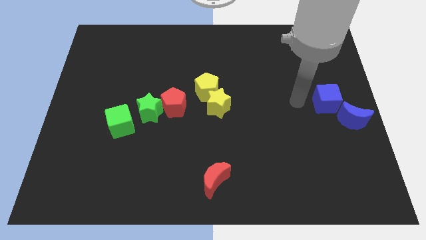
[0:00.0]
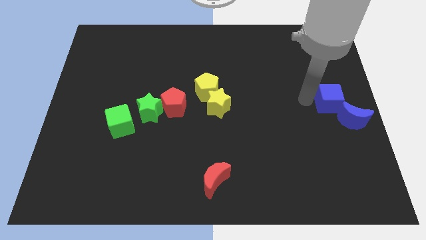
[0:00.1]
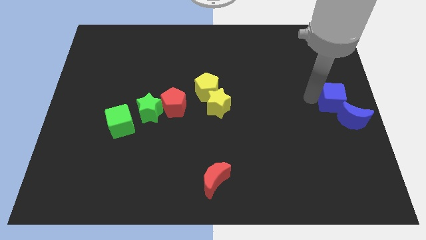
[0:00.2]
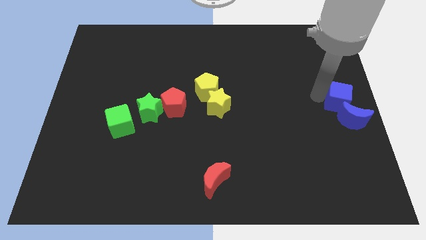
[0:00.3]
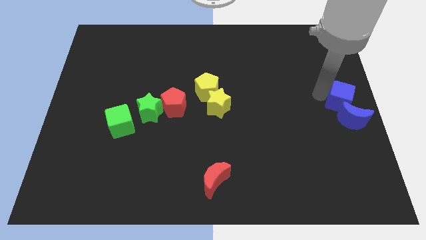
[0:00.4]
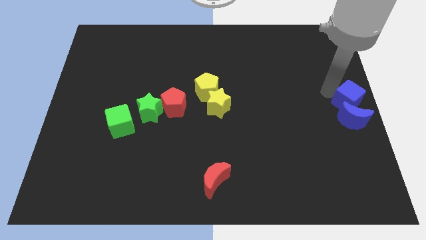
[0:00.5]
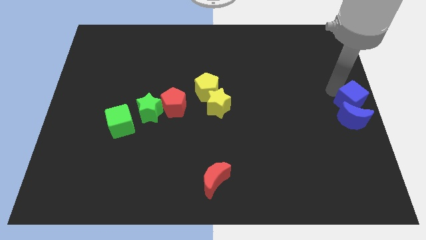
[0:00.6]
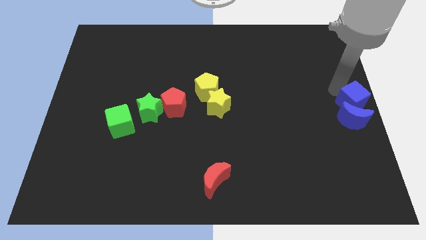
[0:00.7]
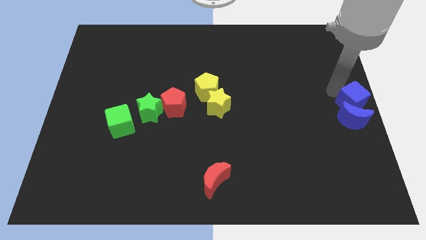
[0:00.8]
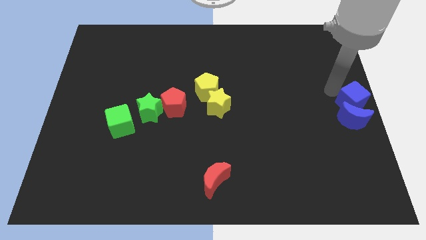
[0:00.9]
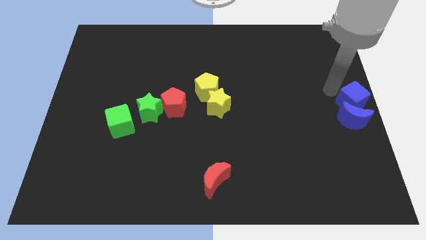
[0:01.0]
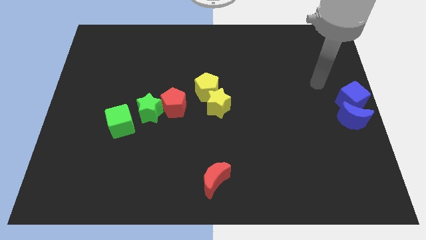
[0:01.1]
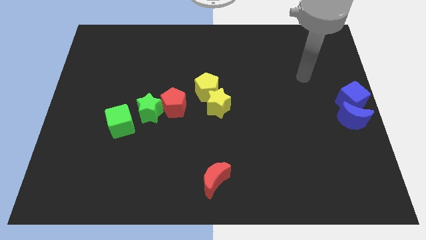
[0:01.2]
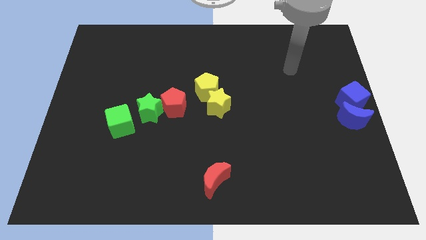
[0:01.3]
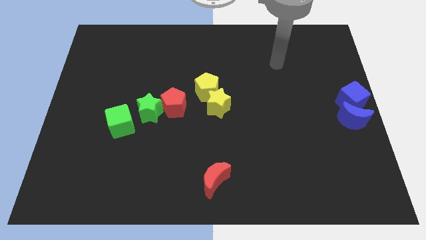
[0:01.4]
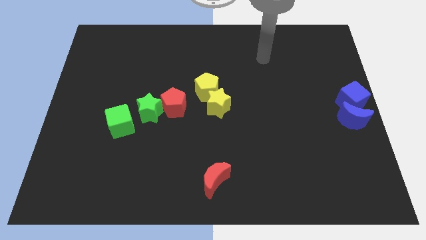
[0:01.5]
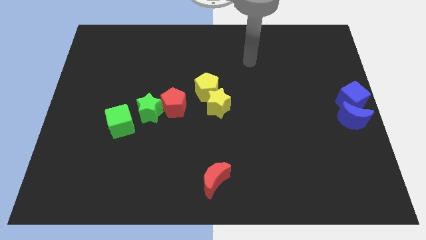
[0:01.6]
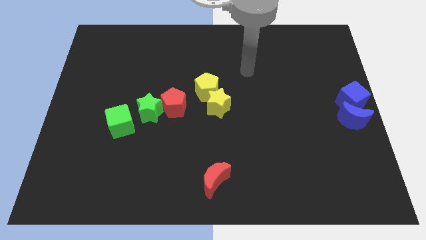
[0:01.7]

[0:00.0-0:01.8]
place the blue cube to the top of the blue moon

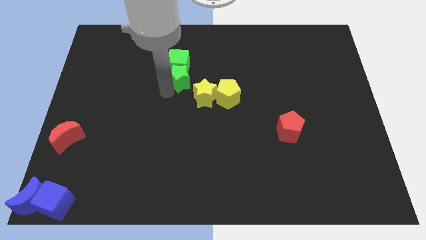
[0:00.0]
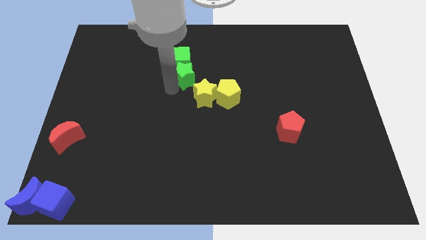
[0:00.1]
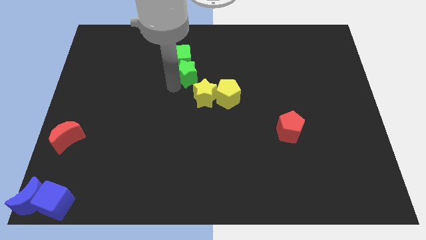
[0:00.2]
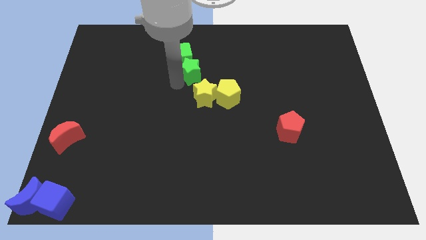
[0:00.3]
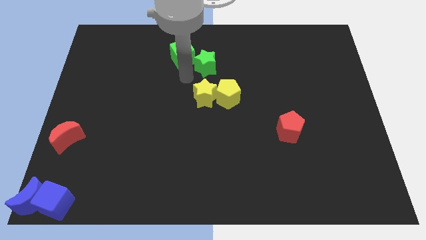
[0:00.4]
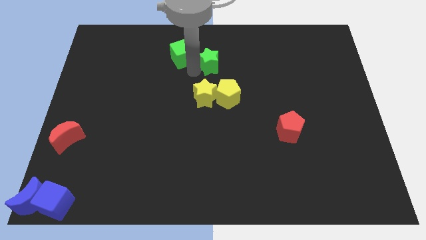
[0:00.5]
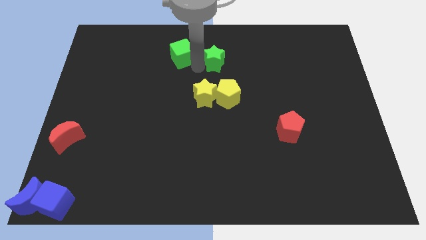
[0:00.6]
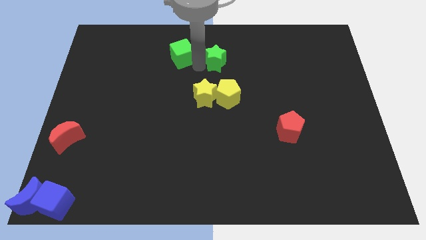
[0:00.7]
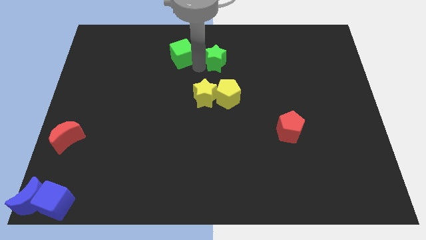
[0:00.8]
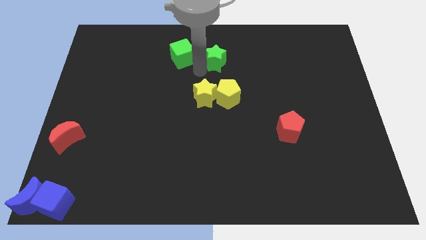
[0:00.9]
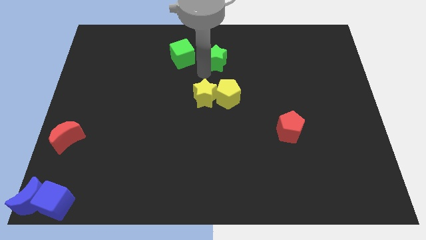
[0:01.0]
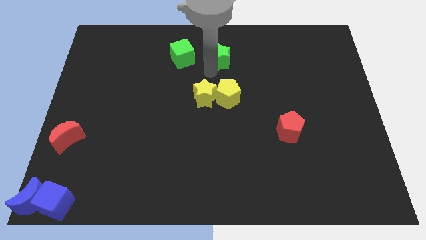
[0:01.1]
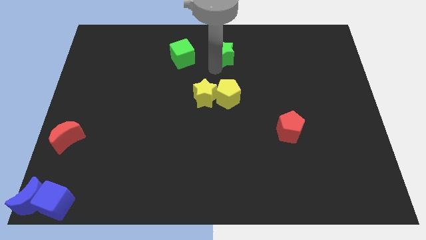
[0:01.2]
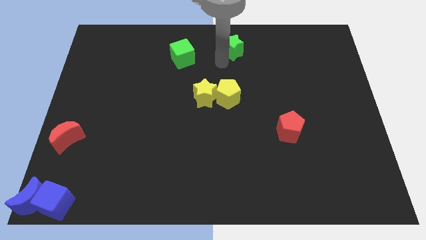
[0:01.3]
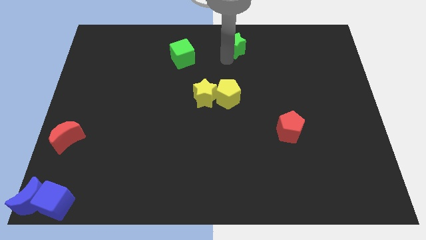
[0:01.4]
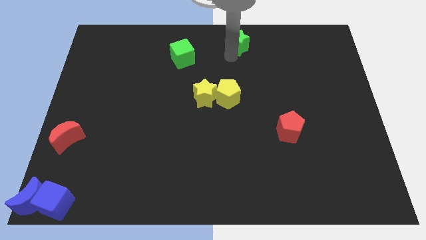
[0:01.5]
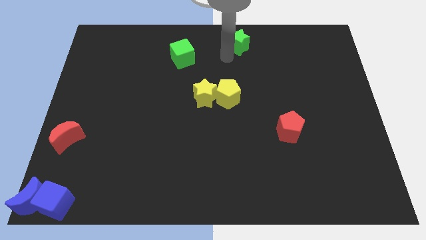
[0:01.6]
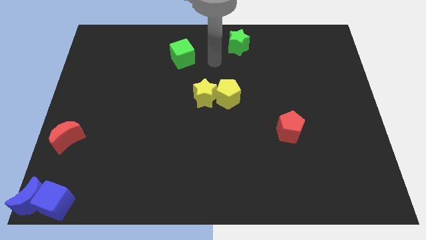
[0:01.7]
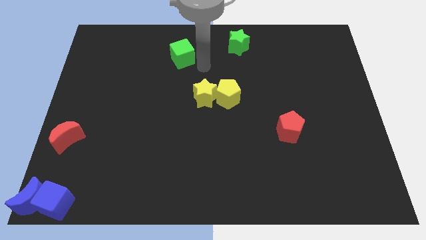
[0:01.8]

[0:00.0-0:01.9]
separate the green star from the green cube

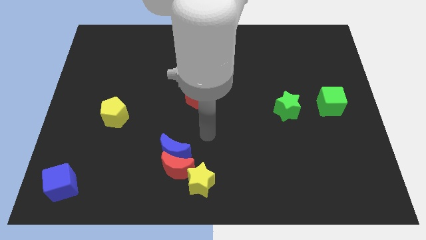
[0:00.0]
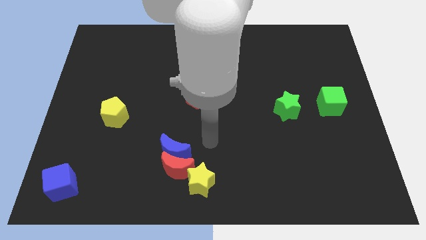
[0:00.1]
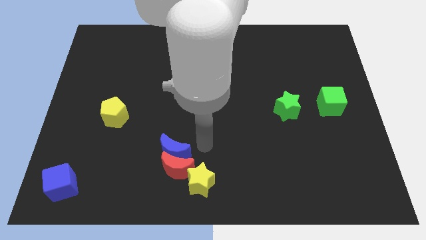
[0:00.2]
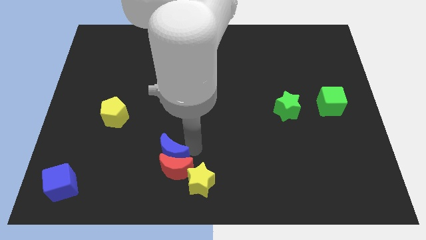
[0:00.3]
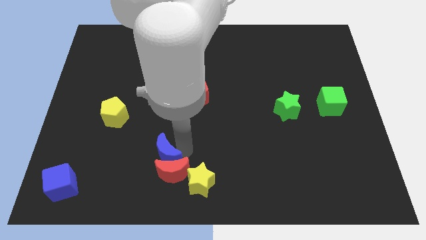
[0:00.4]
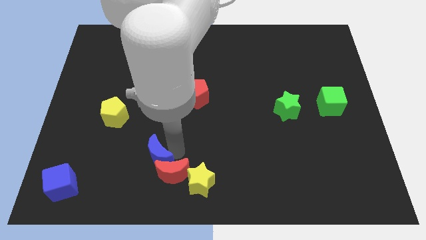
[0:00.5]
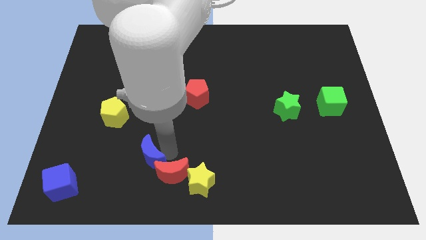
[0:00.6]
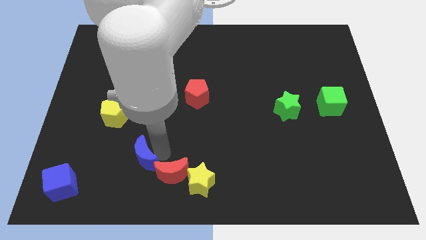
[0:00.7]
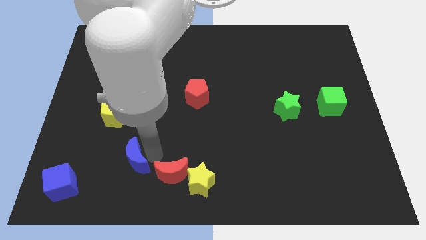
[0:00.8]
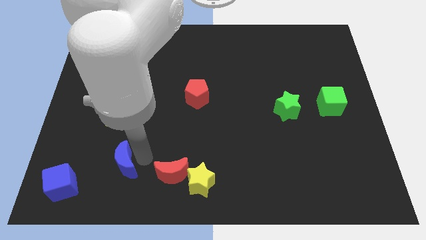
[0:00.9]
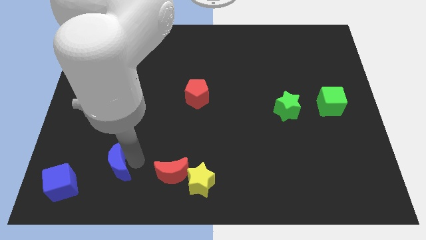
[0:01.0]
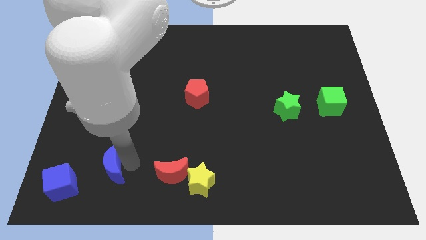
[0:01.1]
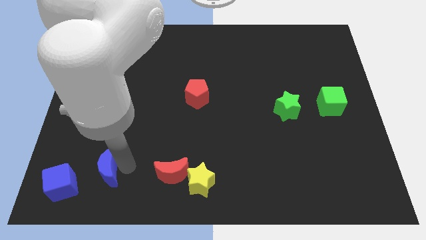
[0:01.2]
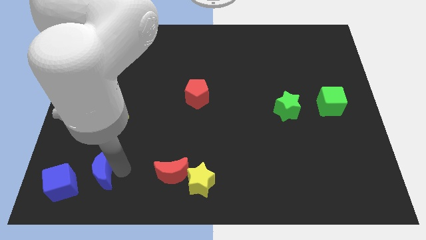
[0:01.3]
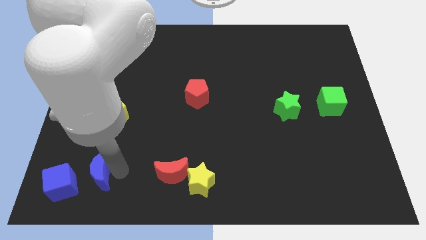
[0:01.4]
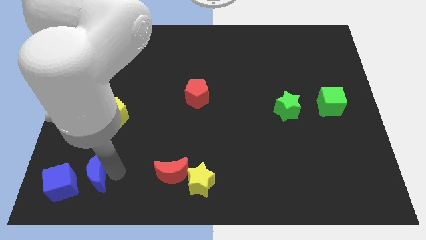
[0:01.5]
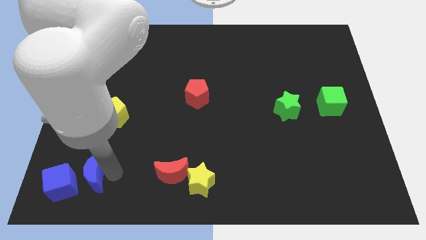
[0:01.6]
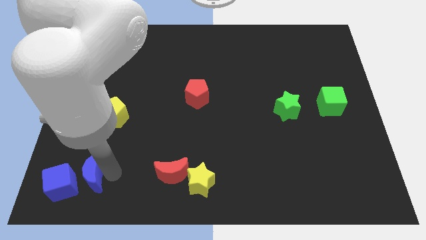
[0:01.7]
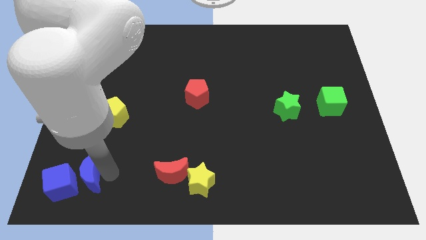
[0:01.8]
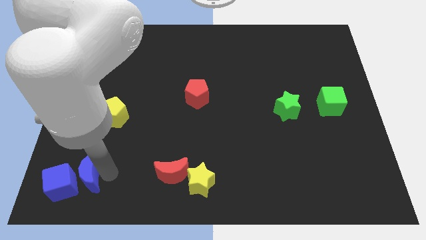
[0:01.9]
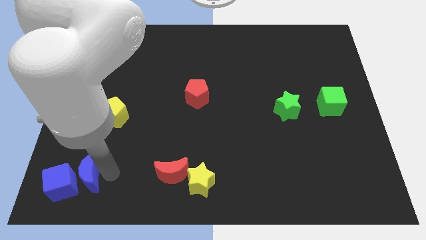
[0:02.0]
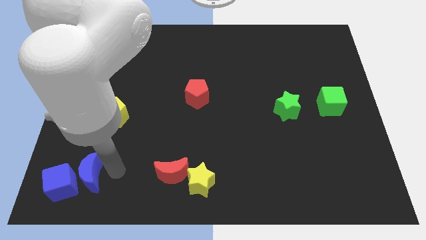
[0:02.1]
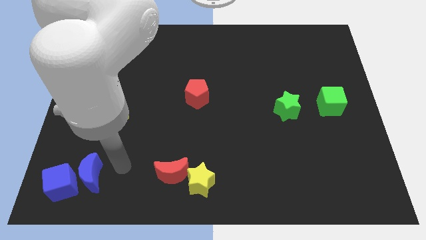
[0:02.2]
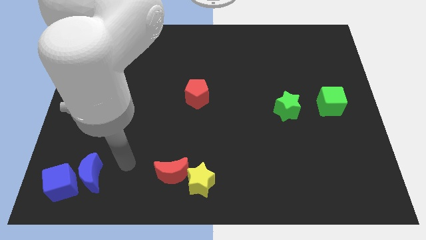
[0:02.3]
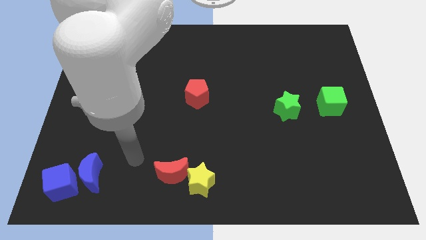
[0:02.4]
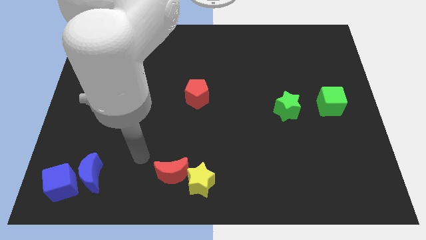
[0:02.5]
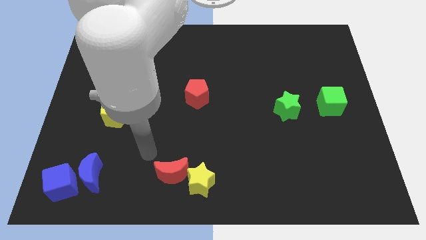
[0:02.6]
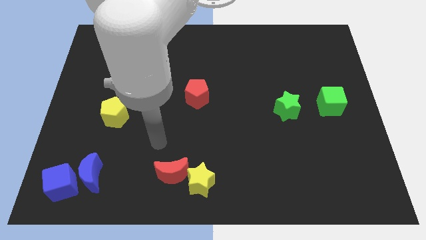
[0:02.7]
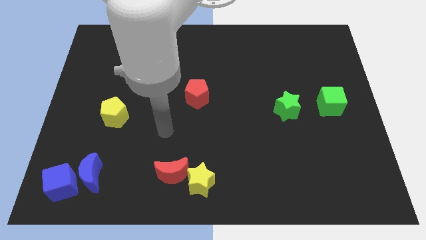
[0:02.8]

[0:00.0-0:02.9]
separate the blue moon from the red moon

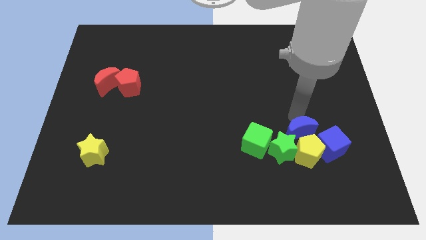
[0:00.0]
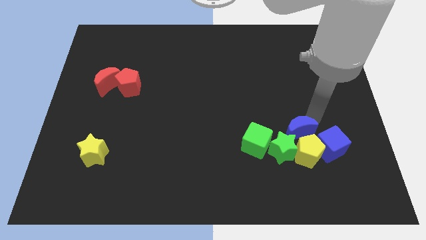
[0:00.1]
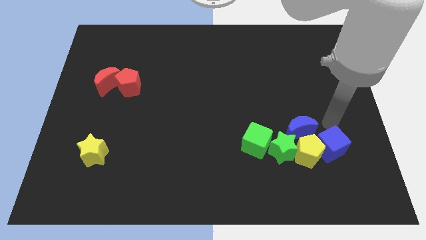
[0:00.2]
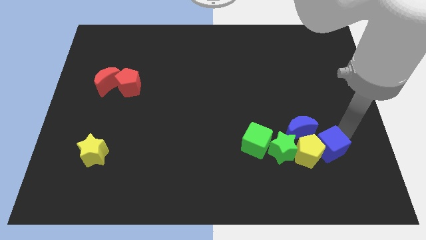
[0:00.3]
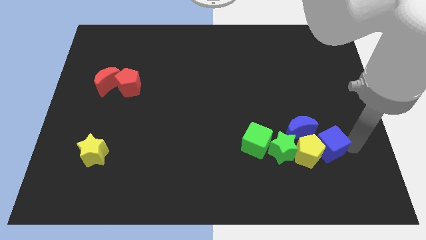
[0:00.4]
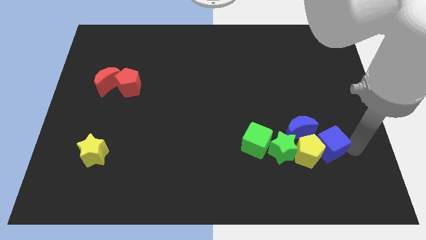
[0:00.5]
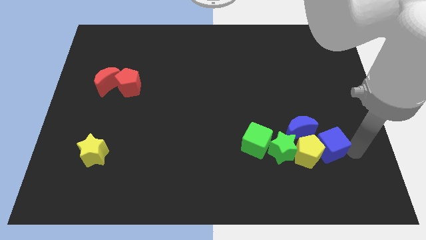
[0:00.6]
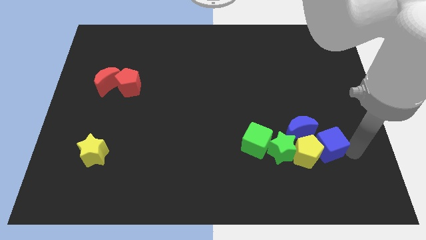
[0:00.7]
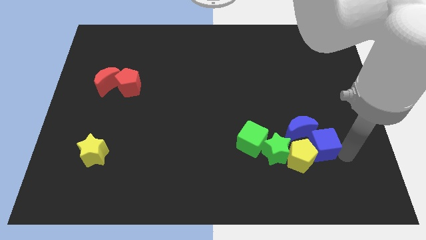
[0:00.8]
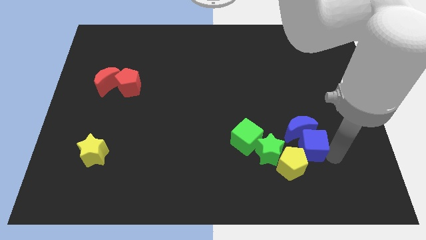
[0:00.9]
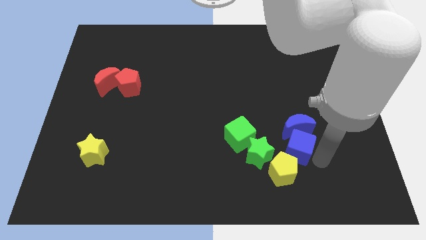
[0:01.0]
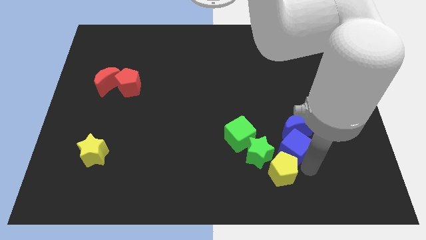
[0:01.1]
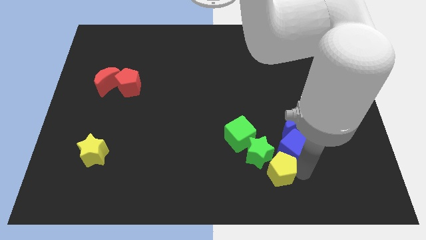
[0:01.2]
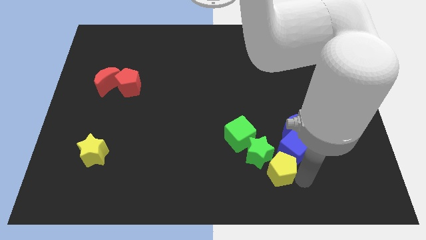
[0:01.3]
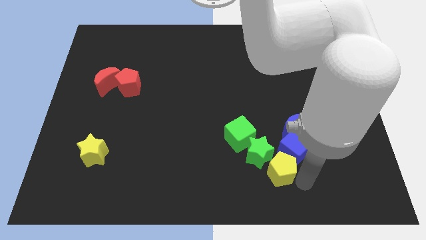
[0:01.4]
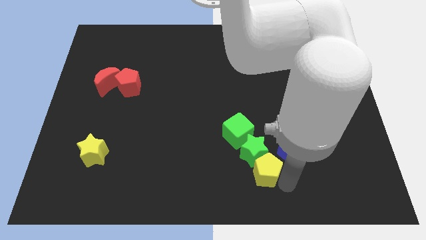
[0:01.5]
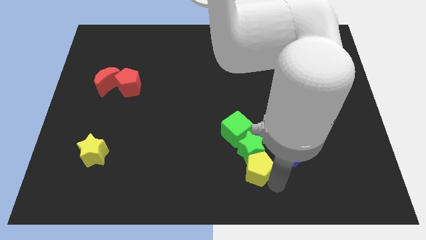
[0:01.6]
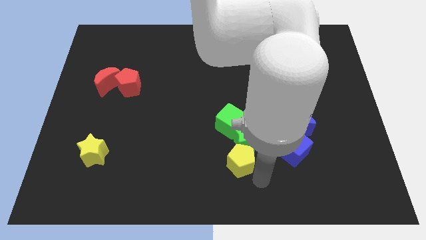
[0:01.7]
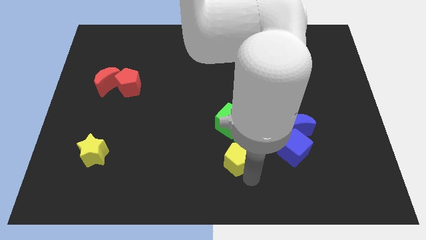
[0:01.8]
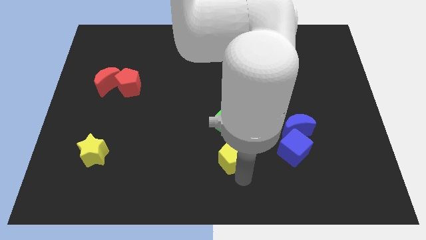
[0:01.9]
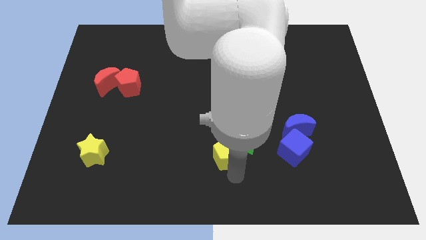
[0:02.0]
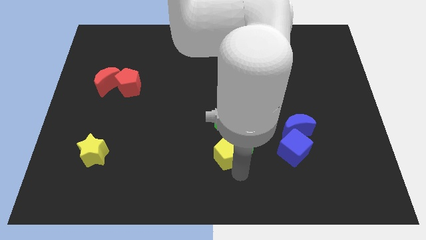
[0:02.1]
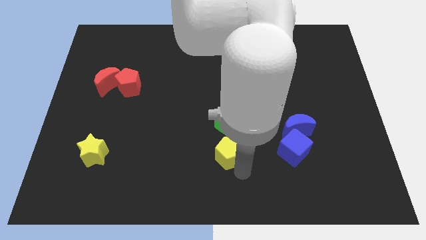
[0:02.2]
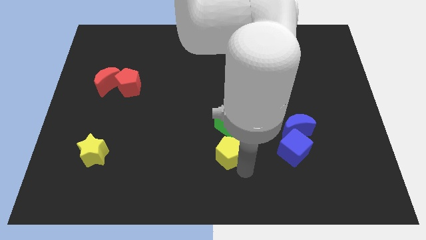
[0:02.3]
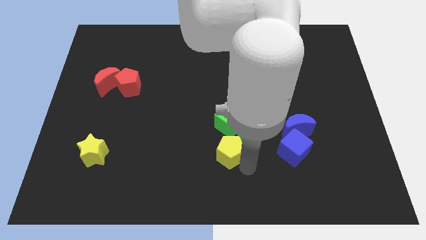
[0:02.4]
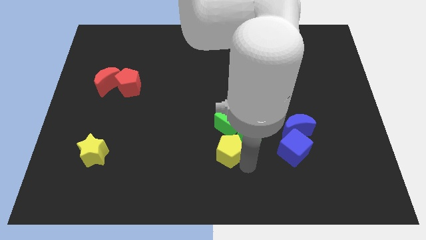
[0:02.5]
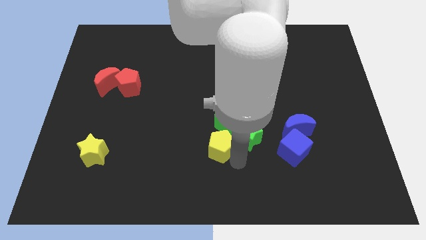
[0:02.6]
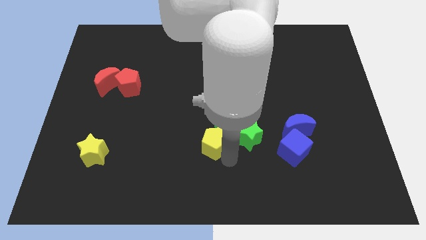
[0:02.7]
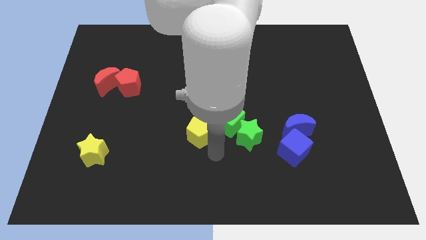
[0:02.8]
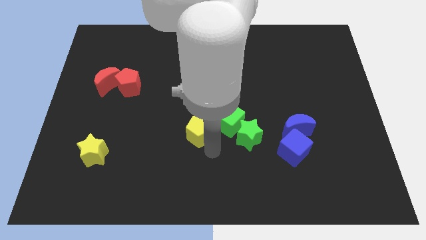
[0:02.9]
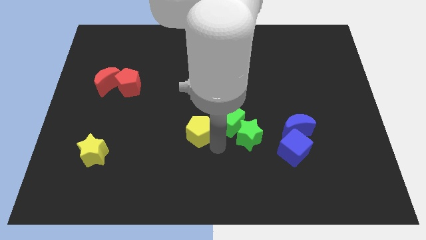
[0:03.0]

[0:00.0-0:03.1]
separate the blue blocks from a group of objects
